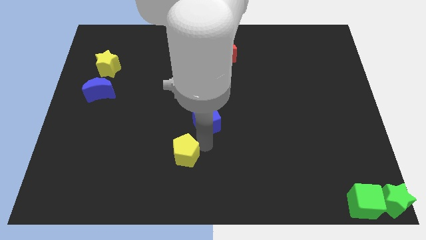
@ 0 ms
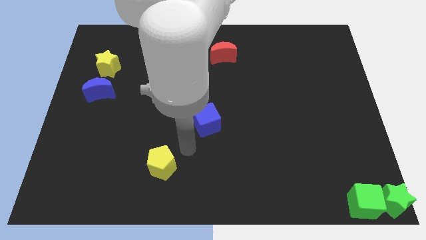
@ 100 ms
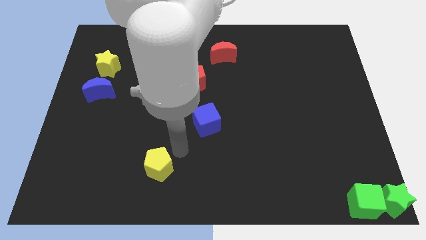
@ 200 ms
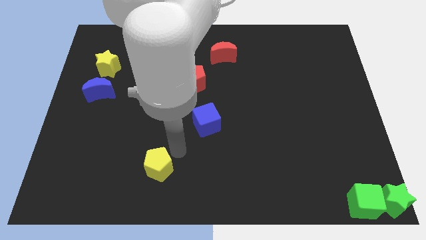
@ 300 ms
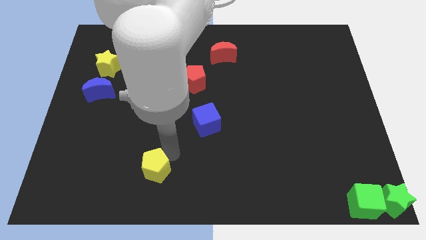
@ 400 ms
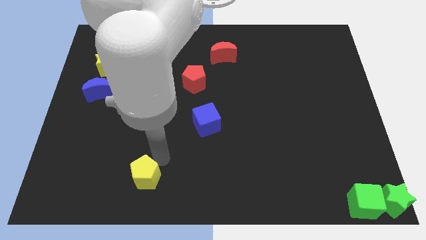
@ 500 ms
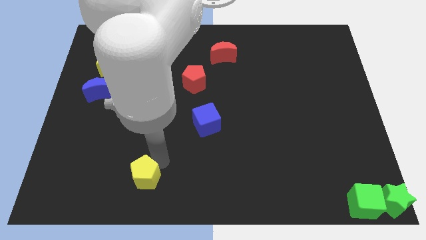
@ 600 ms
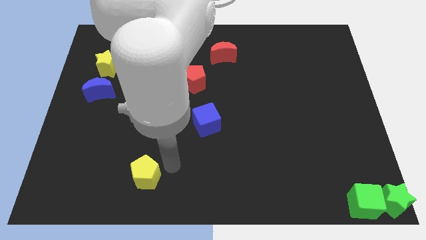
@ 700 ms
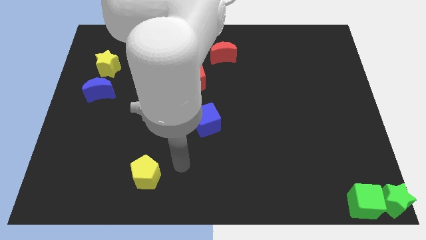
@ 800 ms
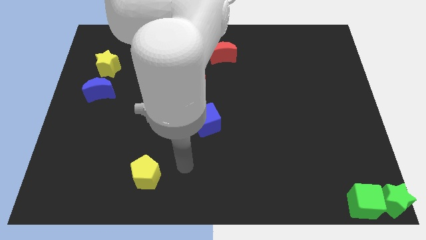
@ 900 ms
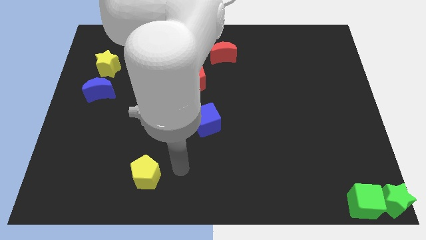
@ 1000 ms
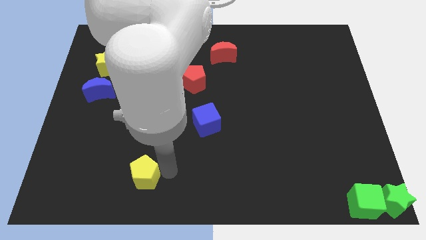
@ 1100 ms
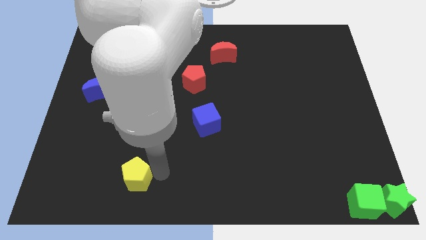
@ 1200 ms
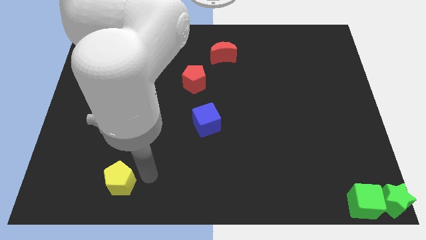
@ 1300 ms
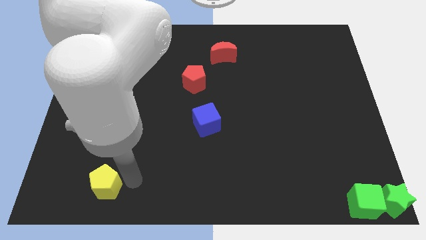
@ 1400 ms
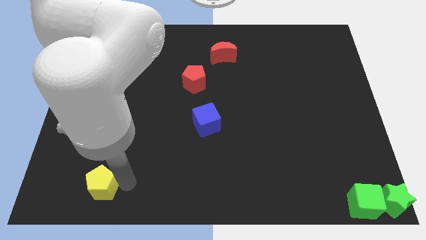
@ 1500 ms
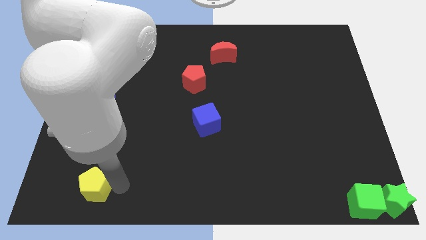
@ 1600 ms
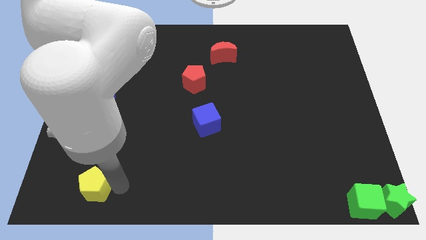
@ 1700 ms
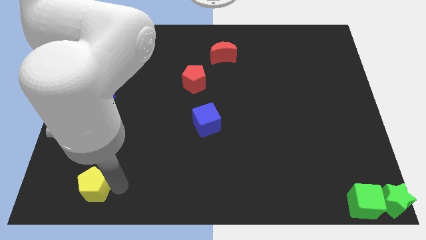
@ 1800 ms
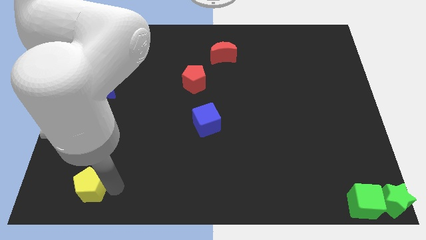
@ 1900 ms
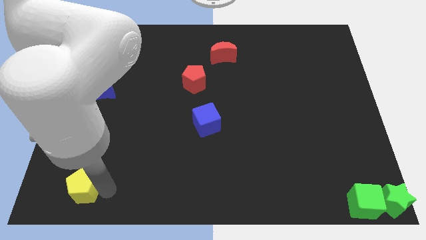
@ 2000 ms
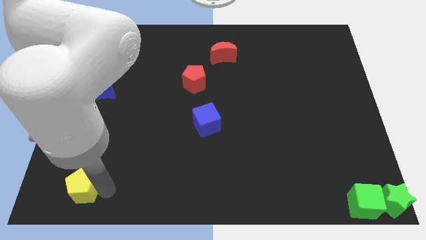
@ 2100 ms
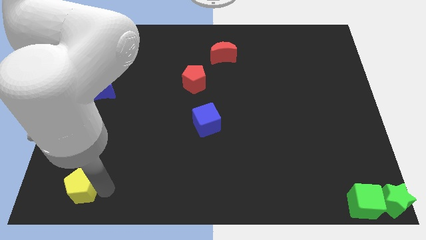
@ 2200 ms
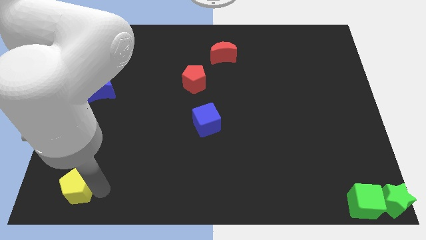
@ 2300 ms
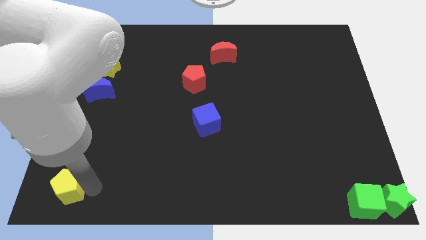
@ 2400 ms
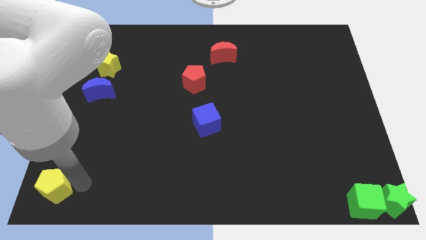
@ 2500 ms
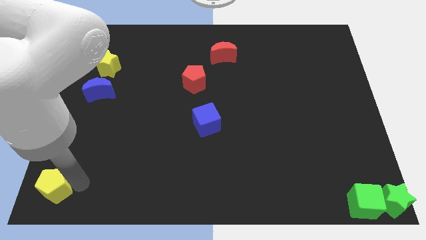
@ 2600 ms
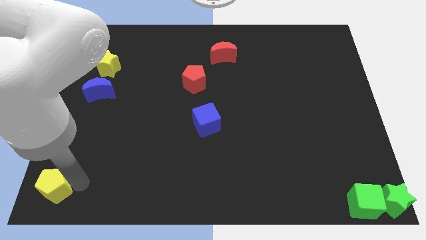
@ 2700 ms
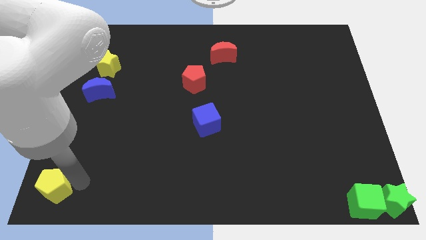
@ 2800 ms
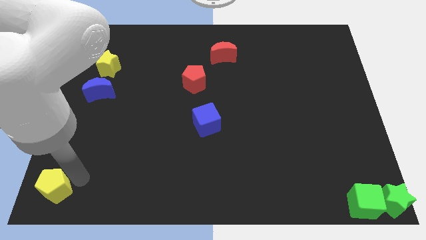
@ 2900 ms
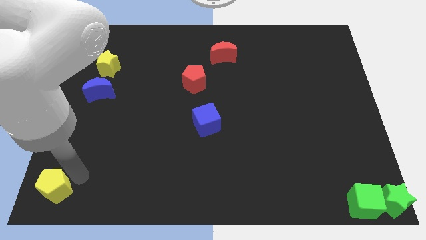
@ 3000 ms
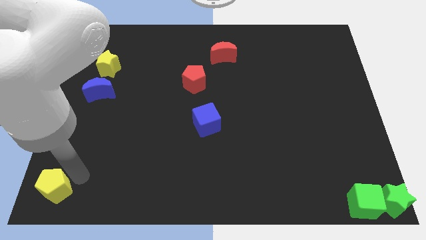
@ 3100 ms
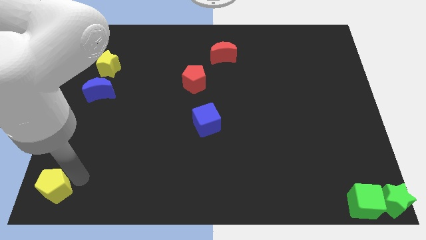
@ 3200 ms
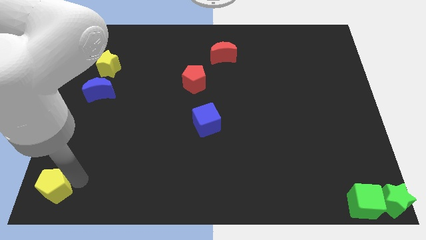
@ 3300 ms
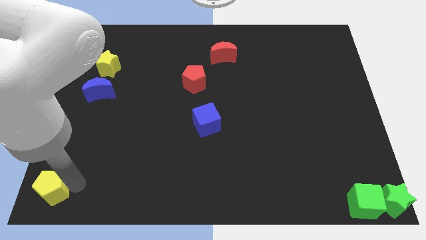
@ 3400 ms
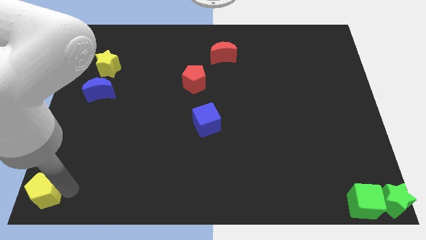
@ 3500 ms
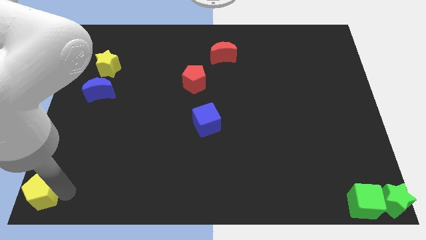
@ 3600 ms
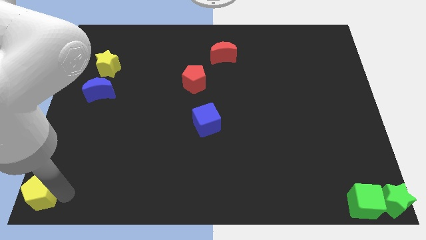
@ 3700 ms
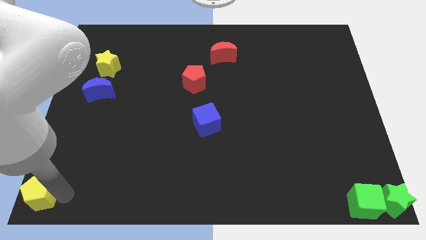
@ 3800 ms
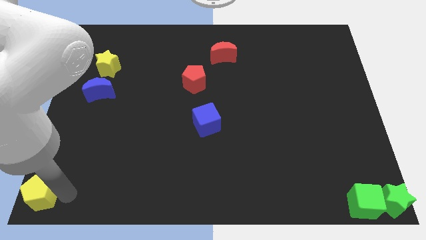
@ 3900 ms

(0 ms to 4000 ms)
push the yellow pentagon to the bottom left to the board

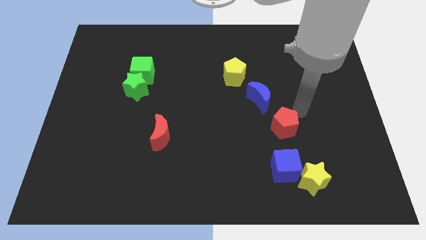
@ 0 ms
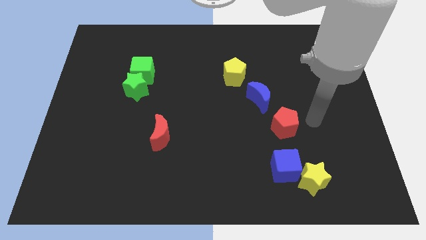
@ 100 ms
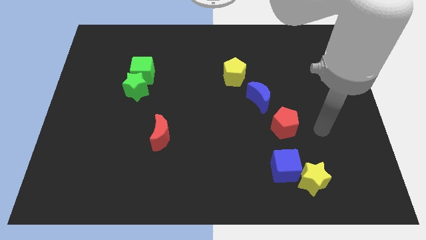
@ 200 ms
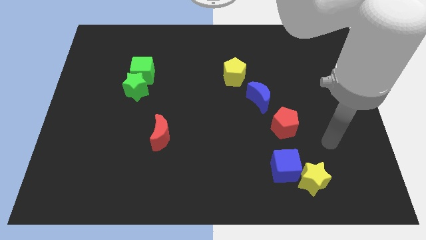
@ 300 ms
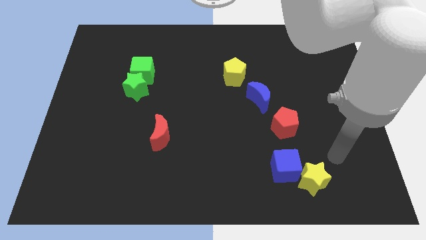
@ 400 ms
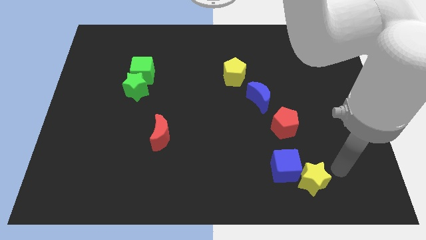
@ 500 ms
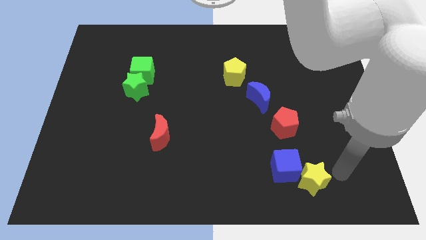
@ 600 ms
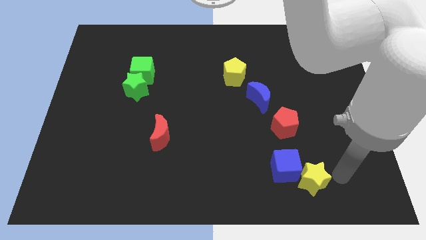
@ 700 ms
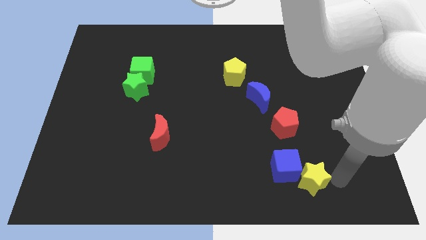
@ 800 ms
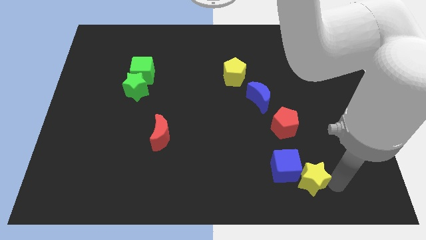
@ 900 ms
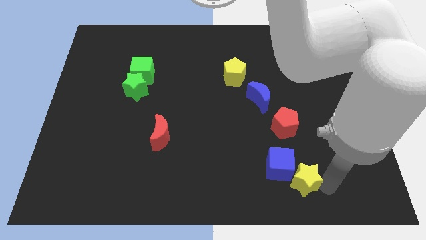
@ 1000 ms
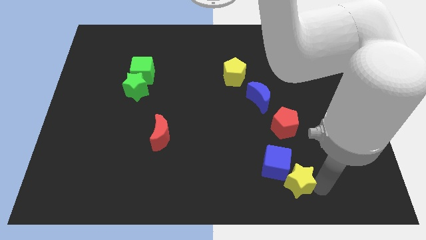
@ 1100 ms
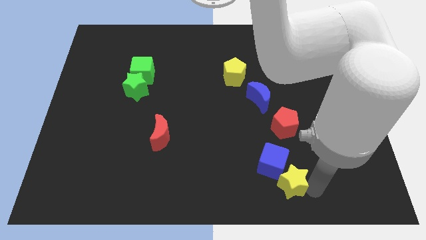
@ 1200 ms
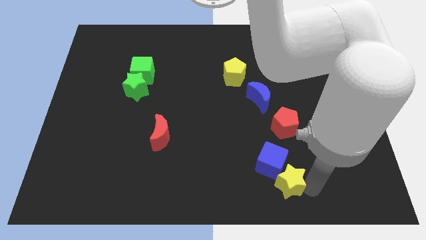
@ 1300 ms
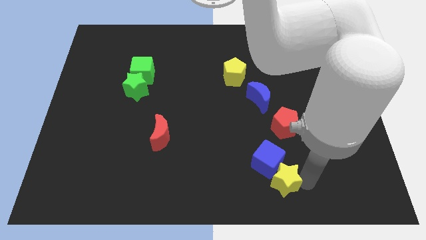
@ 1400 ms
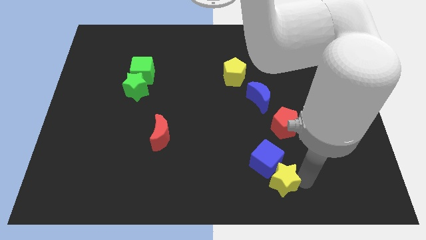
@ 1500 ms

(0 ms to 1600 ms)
push the yellow star and blue cube to the bottom center

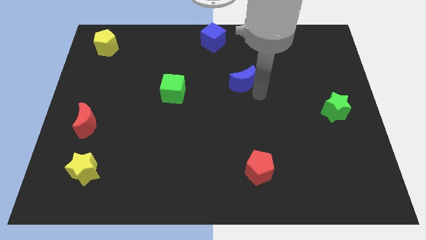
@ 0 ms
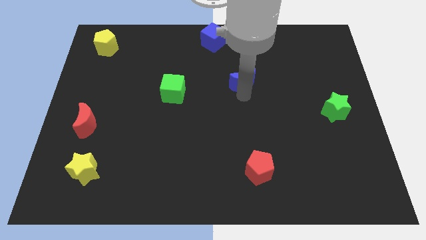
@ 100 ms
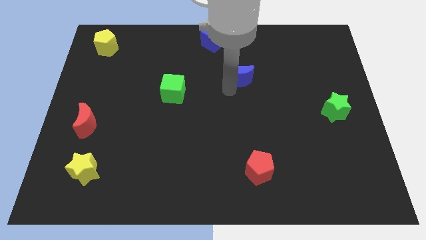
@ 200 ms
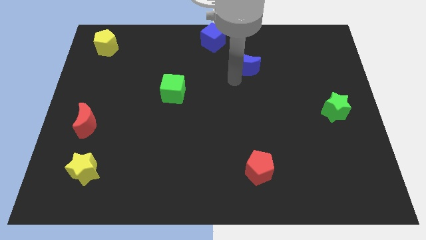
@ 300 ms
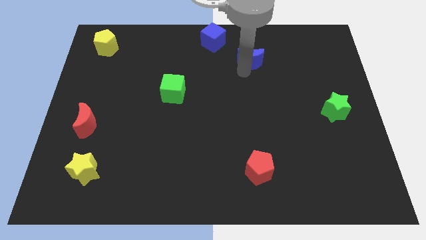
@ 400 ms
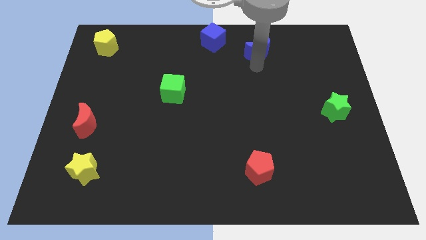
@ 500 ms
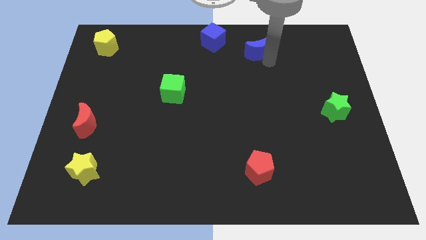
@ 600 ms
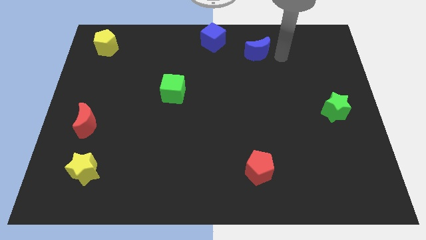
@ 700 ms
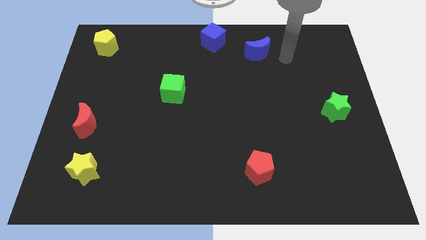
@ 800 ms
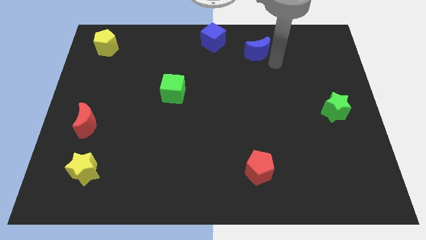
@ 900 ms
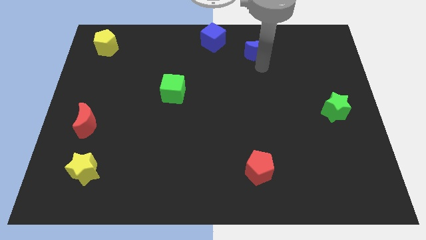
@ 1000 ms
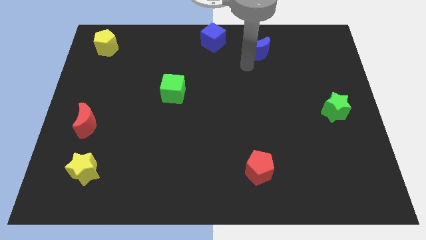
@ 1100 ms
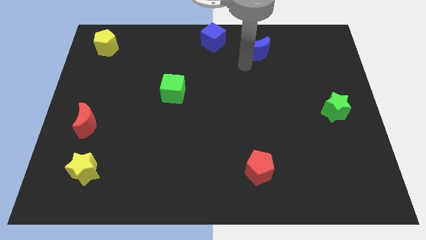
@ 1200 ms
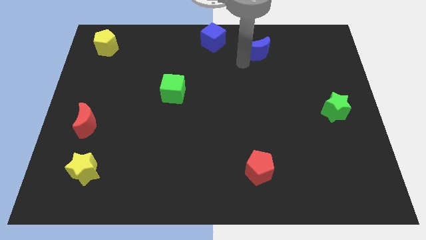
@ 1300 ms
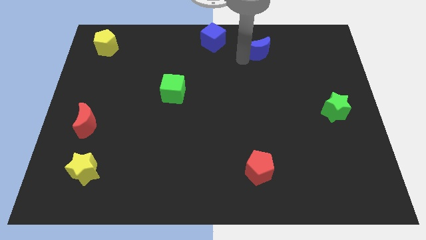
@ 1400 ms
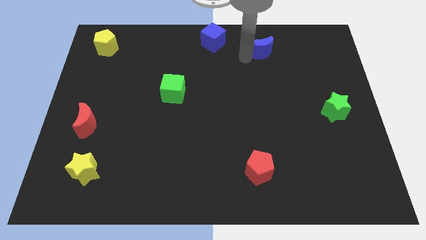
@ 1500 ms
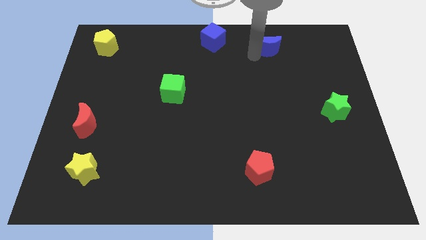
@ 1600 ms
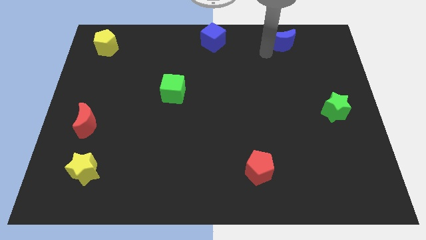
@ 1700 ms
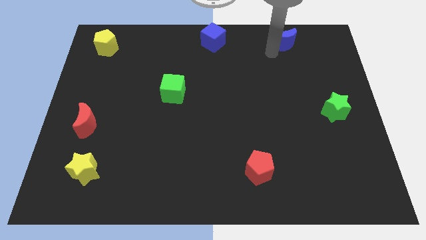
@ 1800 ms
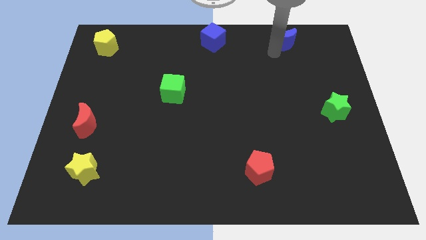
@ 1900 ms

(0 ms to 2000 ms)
put the blue moon horizontally to the right side of the blue cube

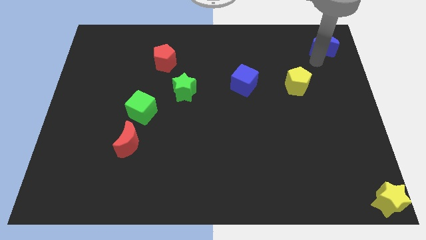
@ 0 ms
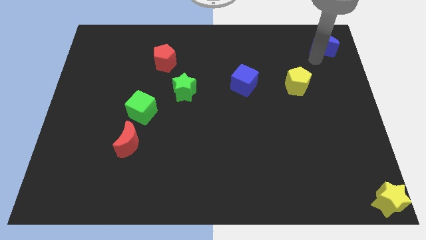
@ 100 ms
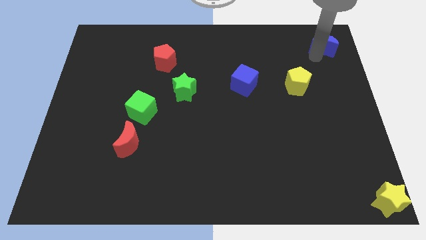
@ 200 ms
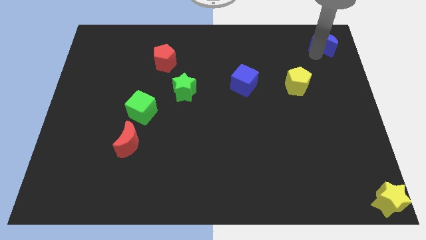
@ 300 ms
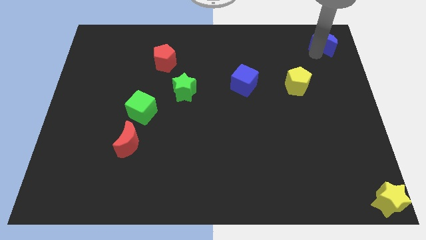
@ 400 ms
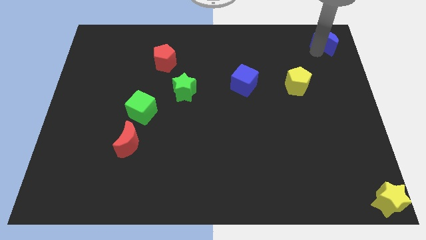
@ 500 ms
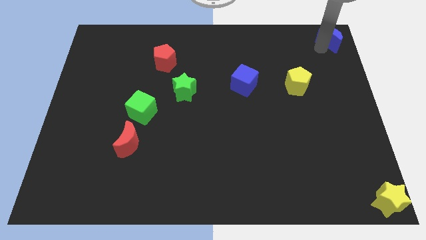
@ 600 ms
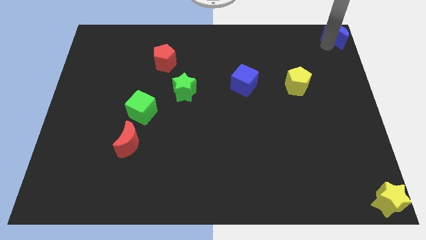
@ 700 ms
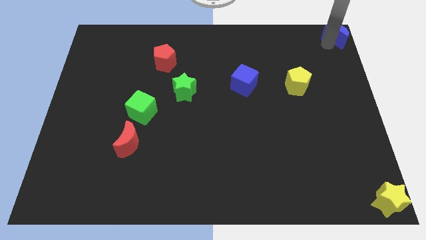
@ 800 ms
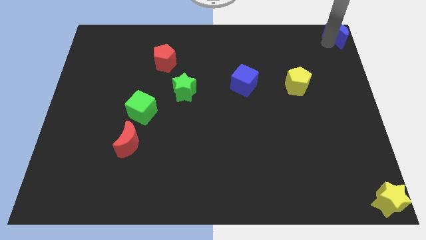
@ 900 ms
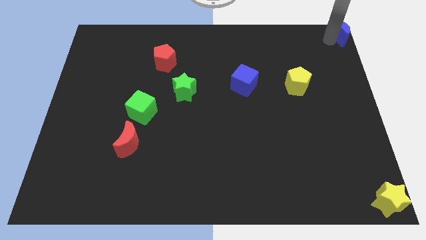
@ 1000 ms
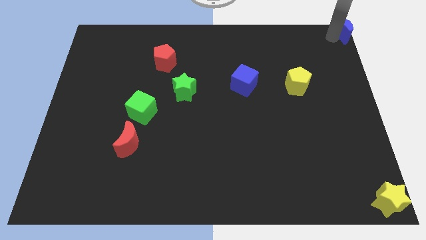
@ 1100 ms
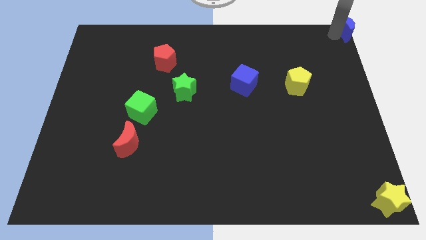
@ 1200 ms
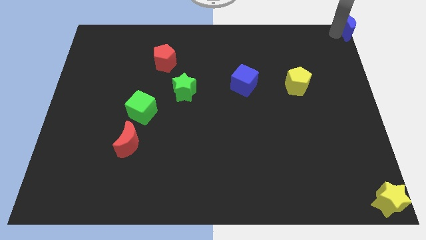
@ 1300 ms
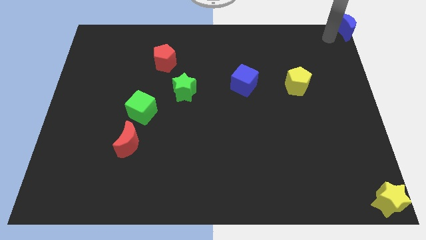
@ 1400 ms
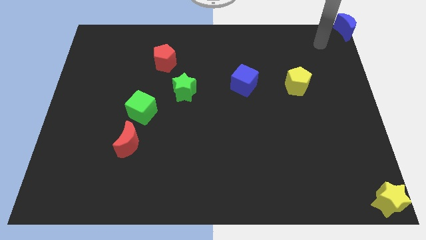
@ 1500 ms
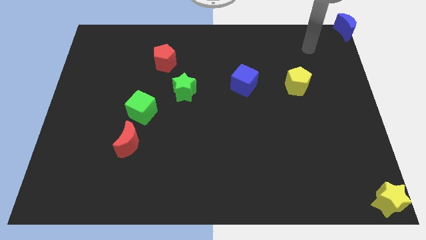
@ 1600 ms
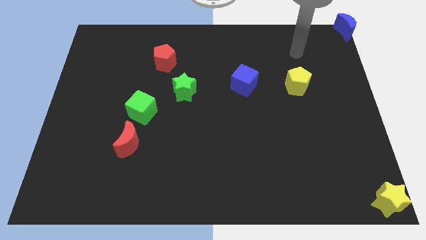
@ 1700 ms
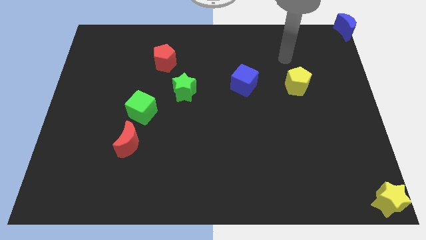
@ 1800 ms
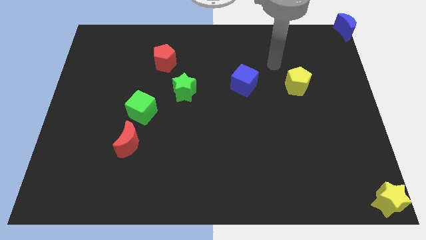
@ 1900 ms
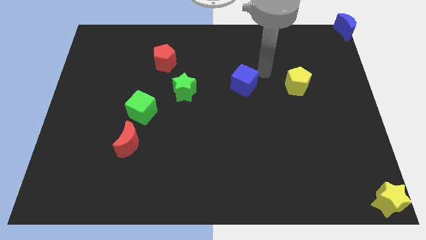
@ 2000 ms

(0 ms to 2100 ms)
push the blue crescent to the top right corner of the board
